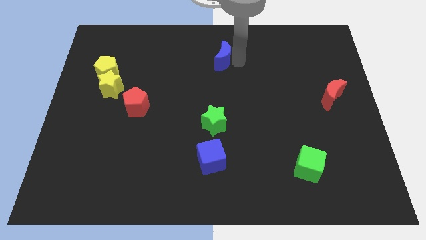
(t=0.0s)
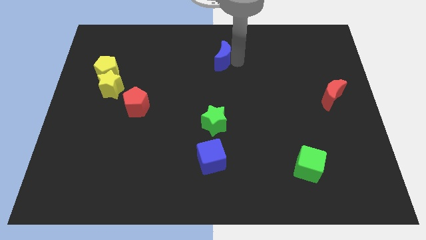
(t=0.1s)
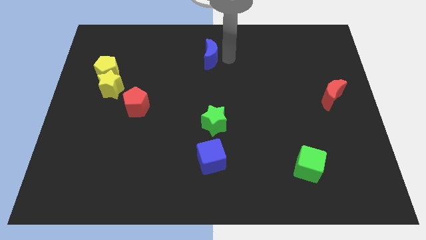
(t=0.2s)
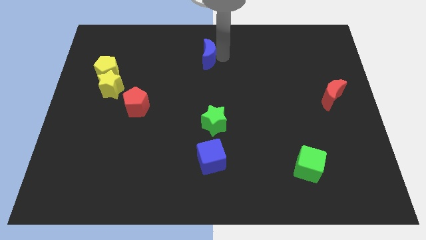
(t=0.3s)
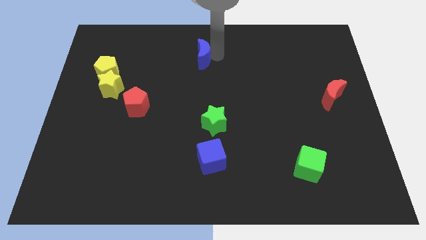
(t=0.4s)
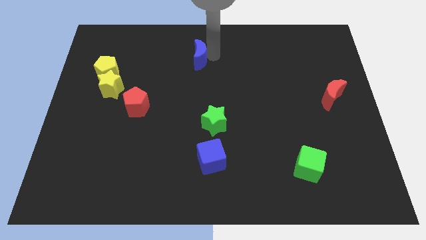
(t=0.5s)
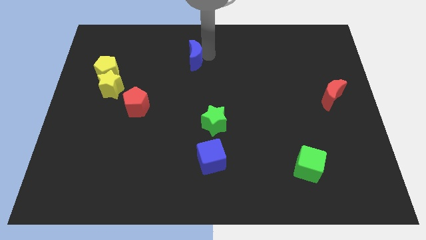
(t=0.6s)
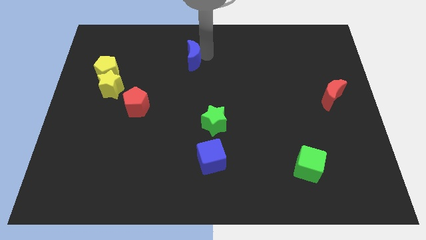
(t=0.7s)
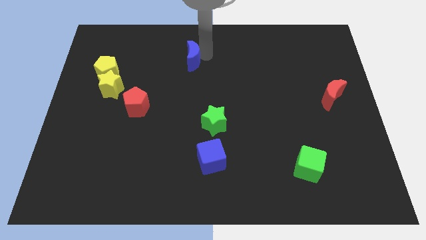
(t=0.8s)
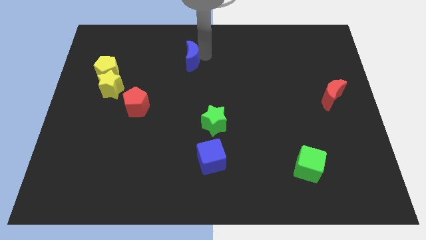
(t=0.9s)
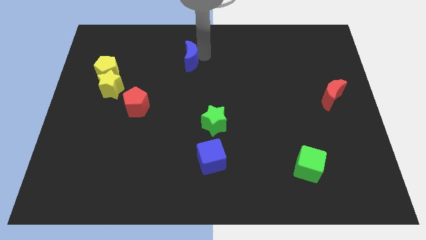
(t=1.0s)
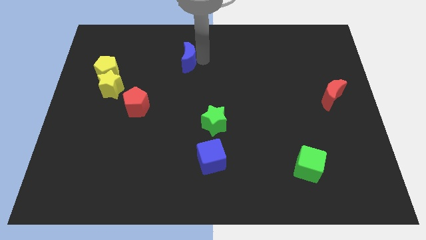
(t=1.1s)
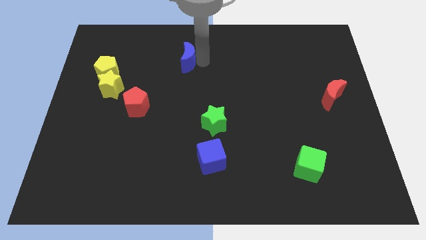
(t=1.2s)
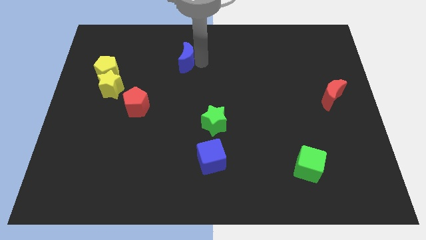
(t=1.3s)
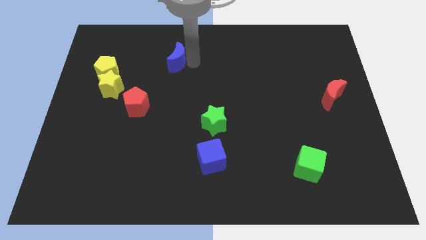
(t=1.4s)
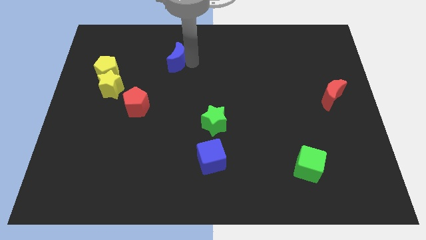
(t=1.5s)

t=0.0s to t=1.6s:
place the blue moon diagonally to red pentagon

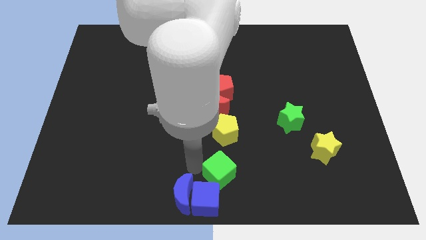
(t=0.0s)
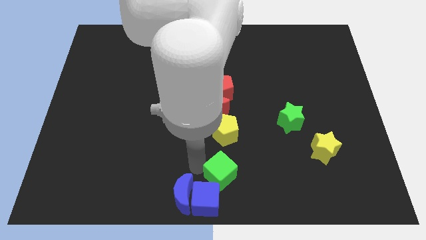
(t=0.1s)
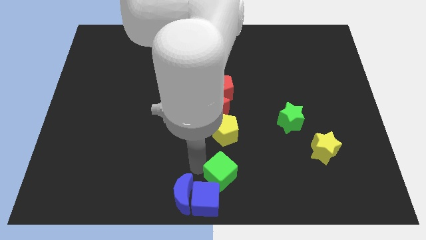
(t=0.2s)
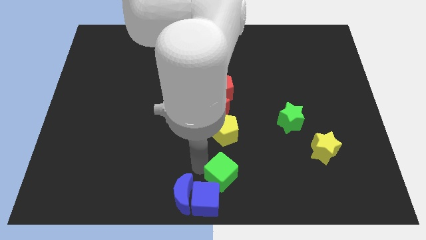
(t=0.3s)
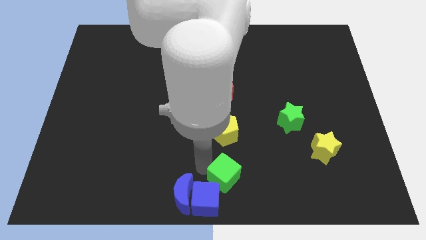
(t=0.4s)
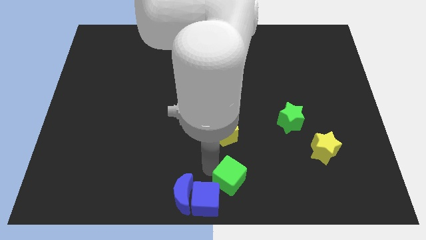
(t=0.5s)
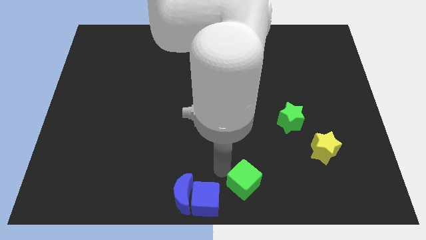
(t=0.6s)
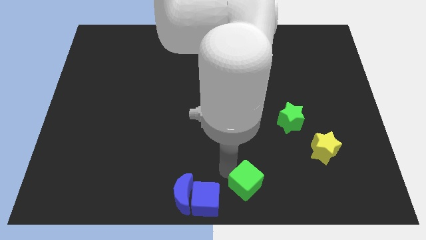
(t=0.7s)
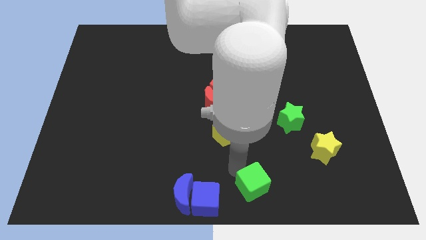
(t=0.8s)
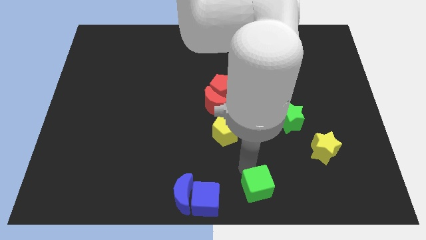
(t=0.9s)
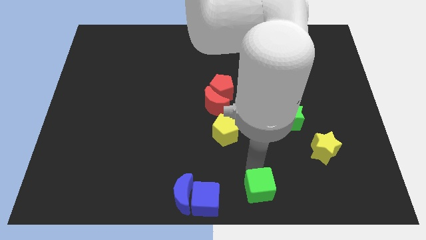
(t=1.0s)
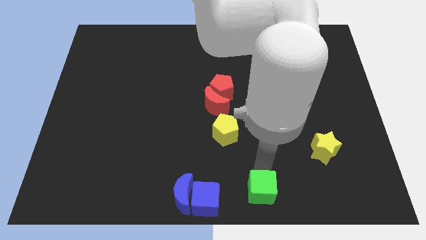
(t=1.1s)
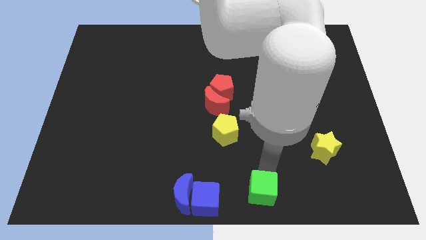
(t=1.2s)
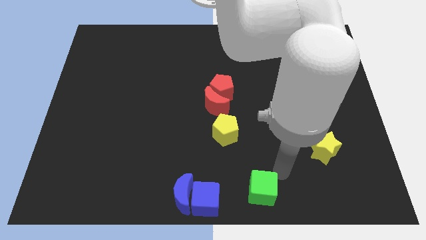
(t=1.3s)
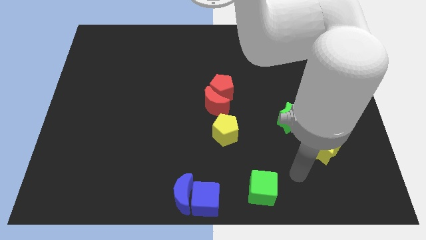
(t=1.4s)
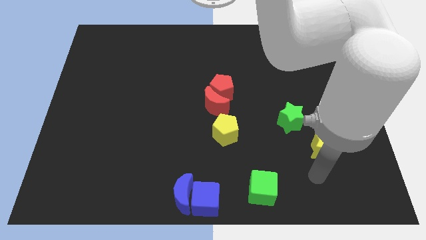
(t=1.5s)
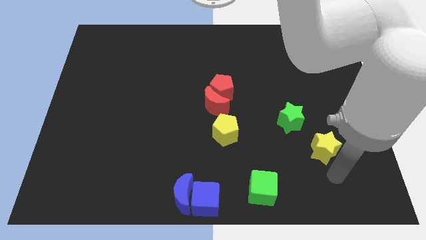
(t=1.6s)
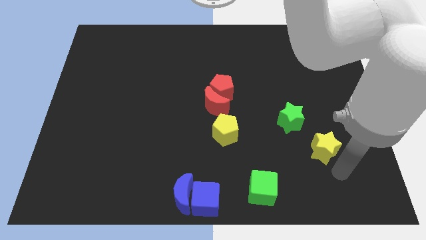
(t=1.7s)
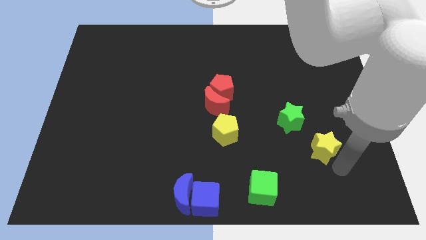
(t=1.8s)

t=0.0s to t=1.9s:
move the green cube to the right of the blue cube

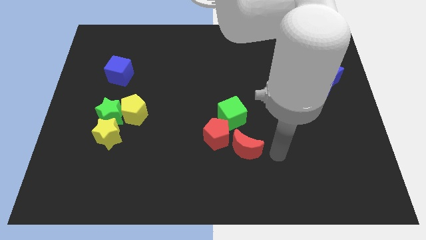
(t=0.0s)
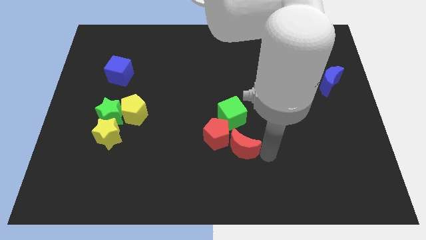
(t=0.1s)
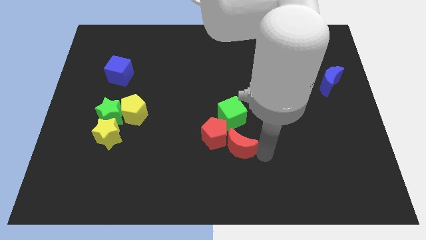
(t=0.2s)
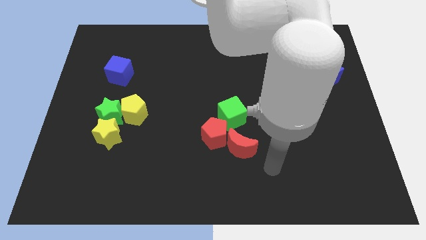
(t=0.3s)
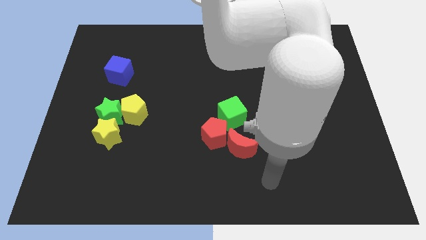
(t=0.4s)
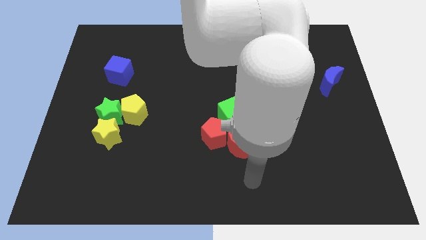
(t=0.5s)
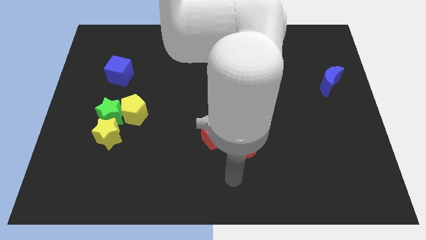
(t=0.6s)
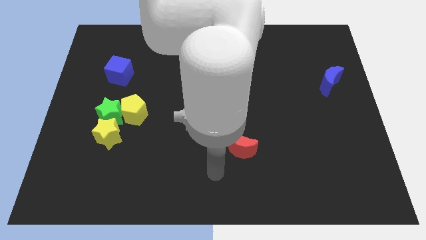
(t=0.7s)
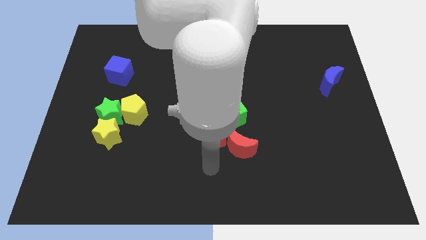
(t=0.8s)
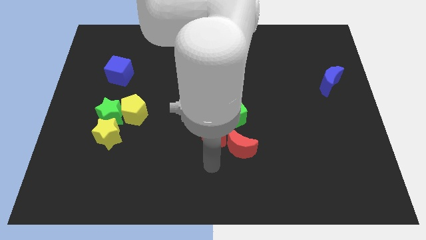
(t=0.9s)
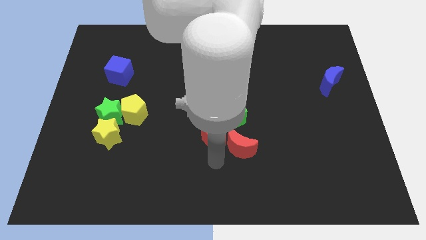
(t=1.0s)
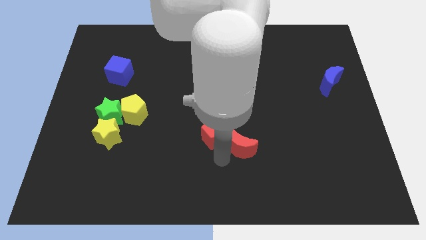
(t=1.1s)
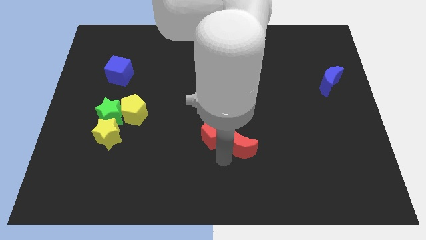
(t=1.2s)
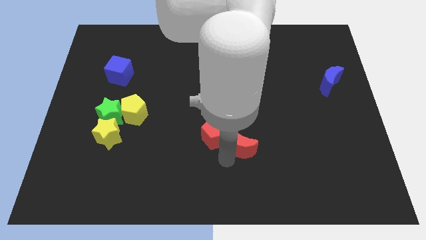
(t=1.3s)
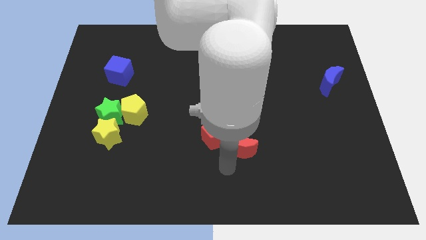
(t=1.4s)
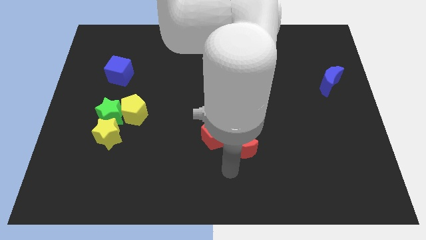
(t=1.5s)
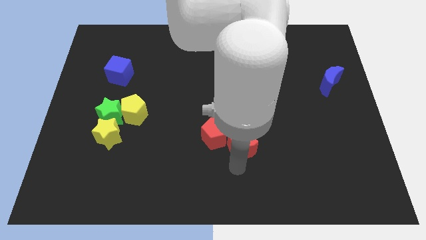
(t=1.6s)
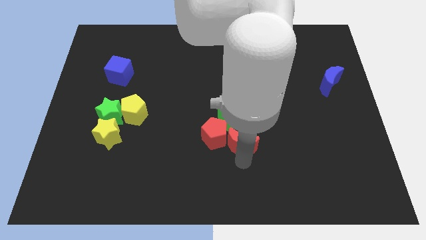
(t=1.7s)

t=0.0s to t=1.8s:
place the red blocks close to each other

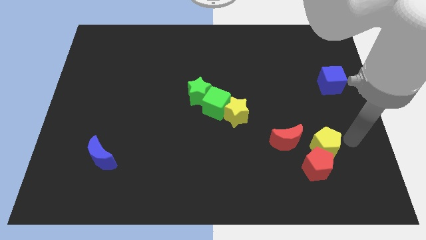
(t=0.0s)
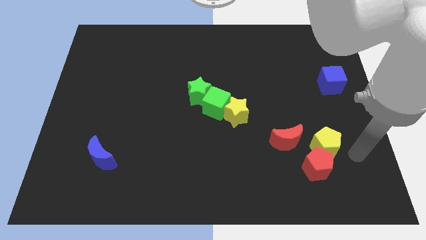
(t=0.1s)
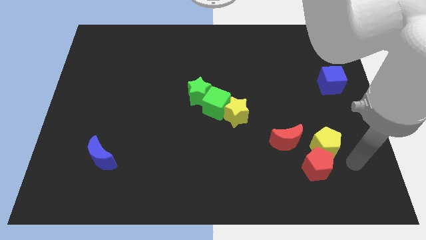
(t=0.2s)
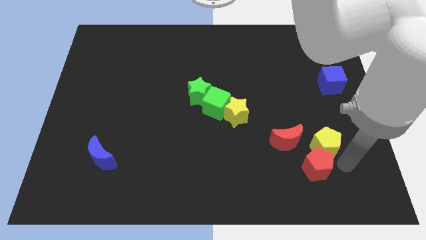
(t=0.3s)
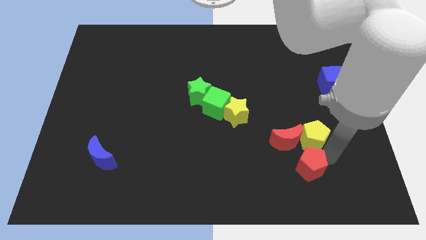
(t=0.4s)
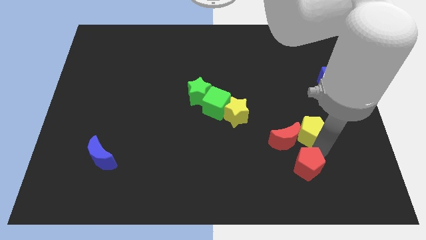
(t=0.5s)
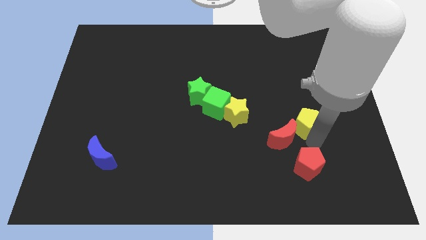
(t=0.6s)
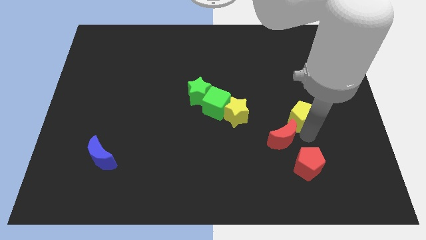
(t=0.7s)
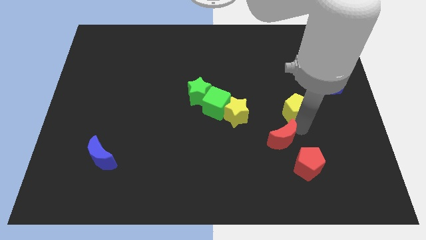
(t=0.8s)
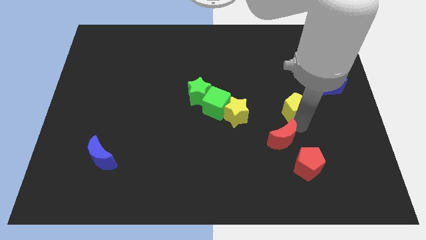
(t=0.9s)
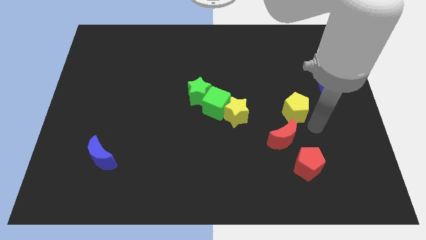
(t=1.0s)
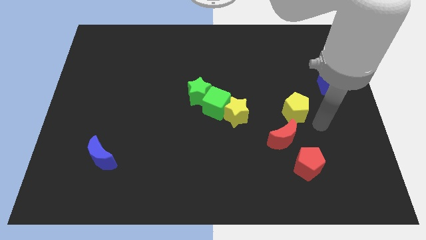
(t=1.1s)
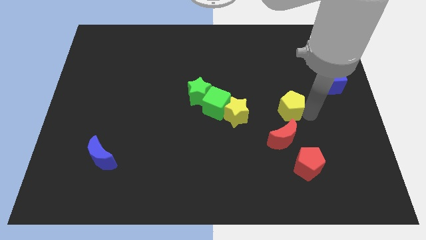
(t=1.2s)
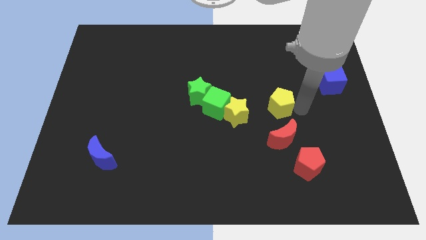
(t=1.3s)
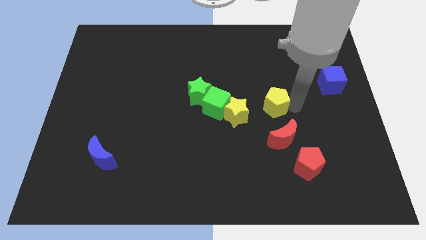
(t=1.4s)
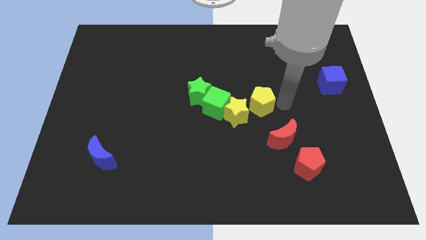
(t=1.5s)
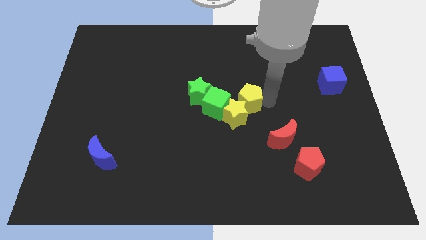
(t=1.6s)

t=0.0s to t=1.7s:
push the yellow pentagon close to the yellow star

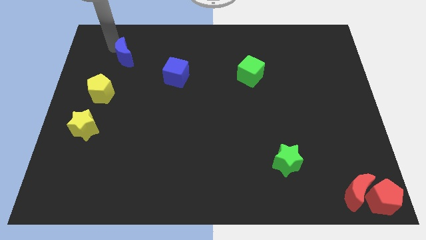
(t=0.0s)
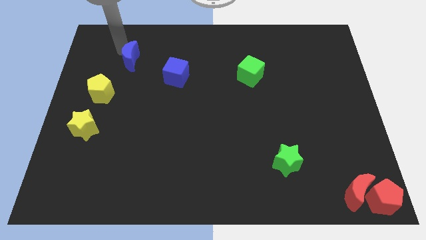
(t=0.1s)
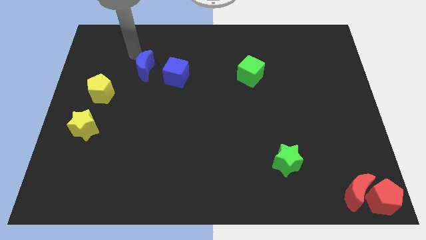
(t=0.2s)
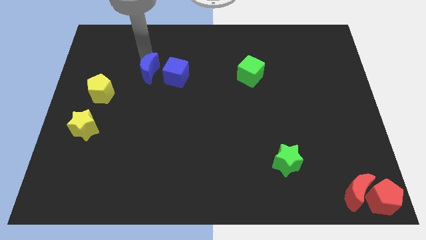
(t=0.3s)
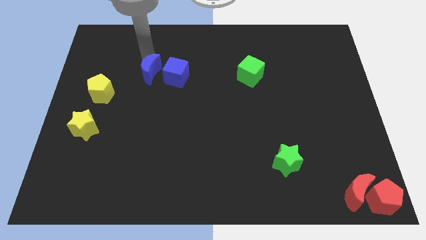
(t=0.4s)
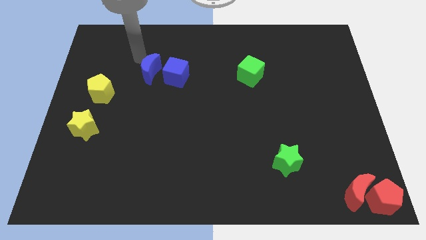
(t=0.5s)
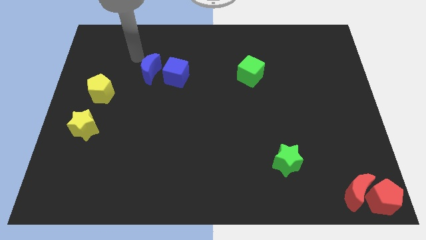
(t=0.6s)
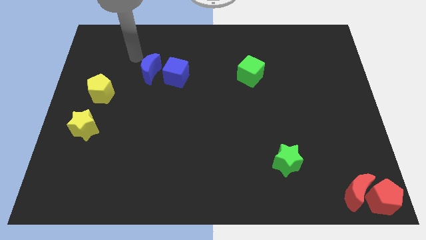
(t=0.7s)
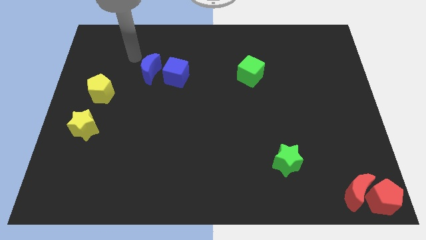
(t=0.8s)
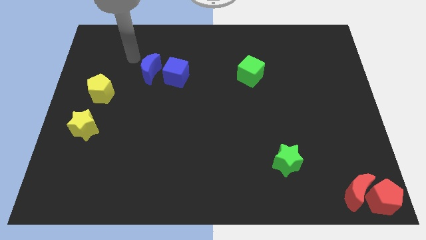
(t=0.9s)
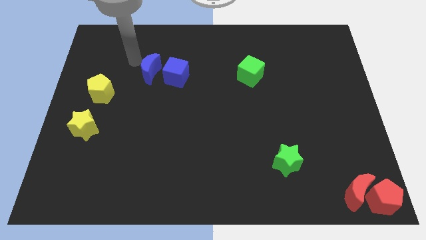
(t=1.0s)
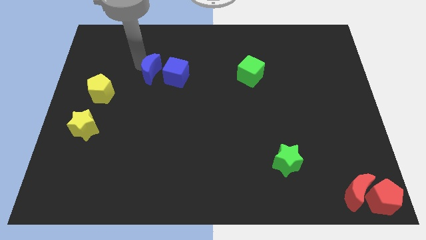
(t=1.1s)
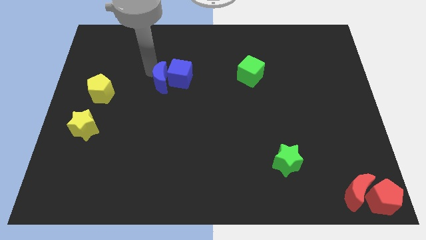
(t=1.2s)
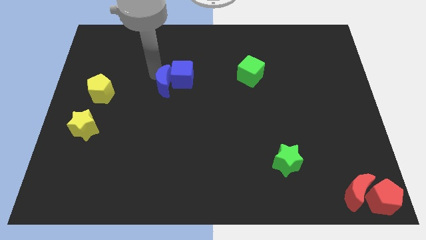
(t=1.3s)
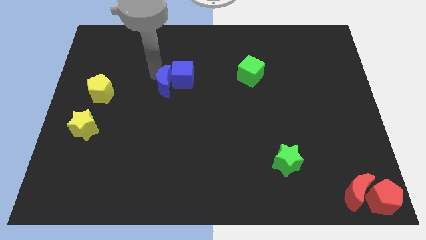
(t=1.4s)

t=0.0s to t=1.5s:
push the blue crescent into the left side of the blue cube

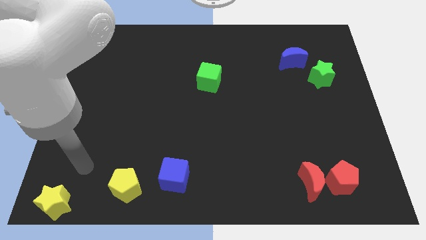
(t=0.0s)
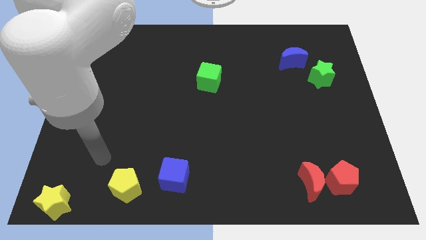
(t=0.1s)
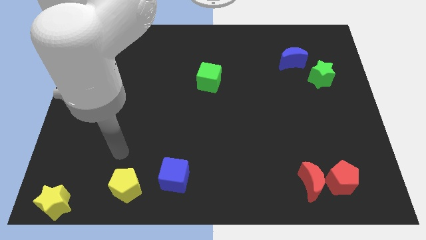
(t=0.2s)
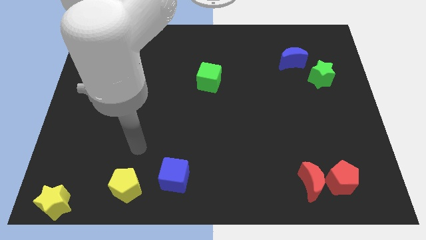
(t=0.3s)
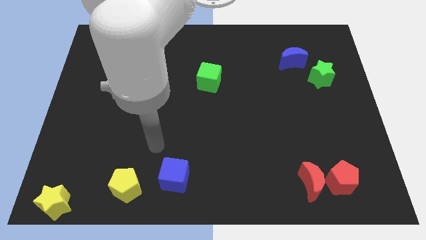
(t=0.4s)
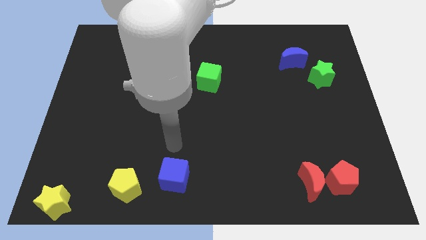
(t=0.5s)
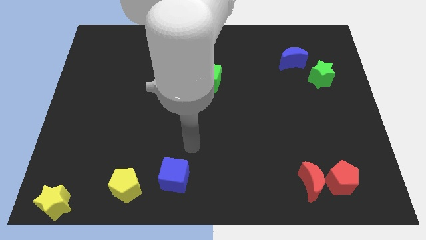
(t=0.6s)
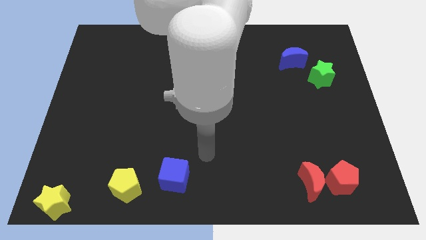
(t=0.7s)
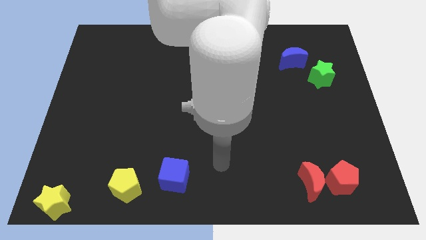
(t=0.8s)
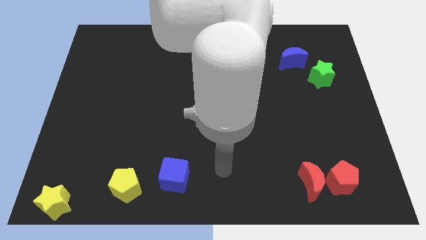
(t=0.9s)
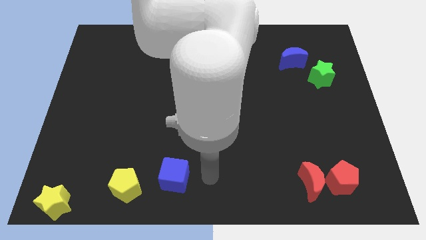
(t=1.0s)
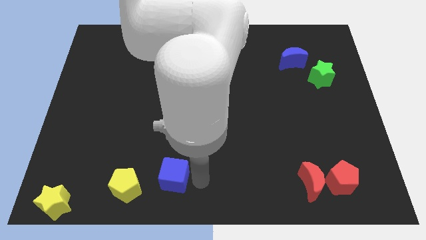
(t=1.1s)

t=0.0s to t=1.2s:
put arm at bottom center
